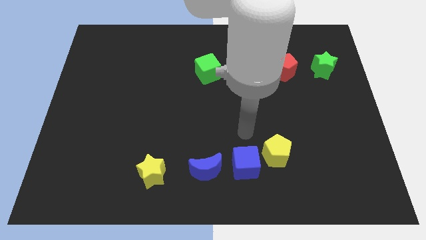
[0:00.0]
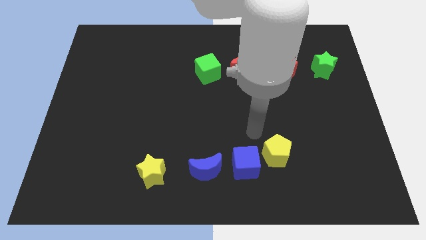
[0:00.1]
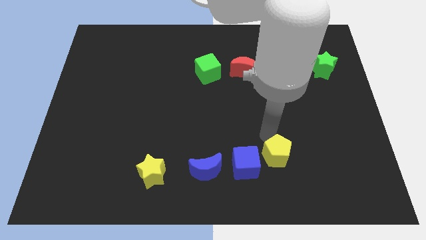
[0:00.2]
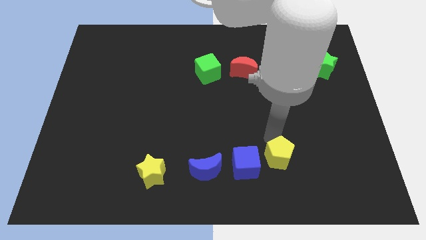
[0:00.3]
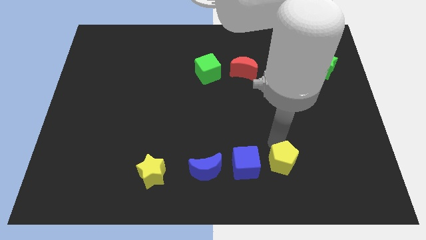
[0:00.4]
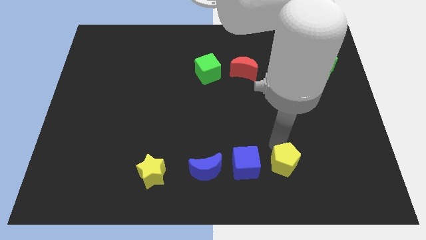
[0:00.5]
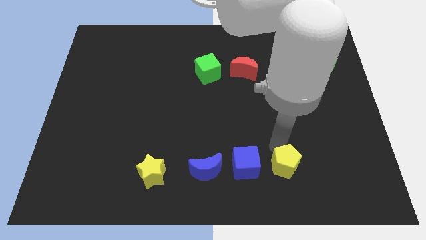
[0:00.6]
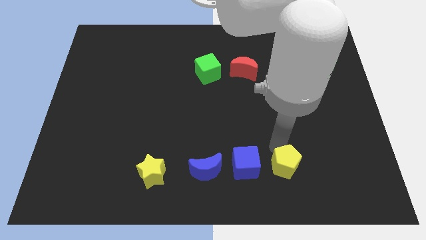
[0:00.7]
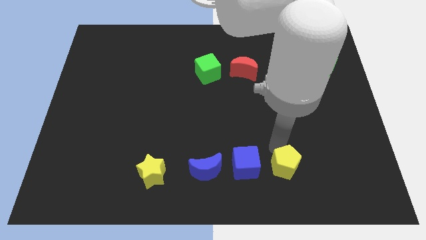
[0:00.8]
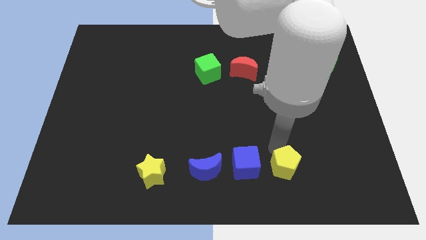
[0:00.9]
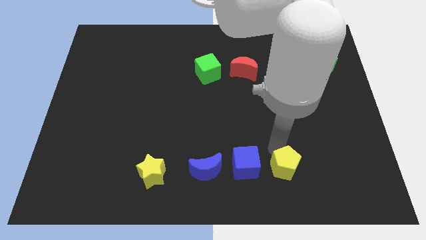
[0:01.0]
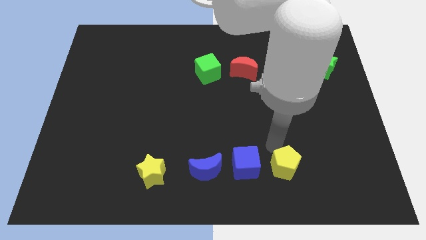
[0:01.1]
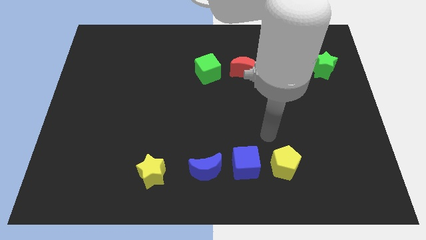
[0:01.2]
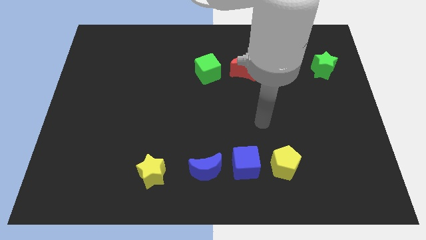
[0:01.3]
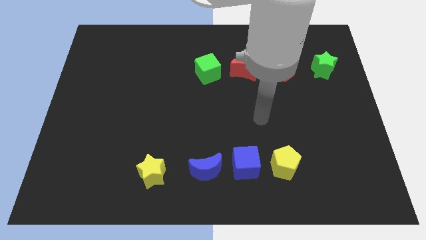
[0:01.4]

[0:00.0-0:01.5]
slightly push the yellow pentagon to the bottom

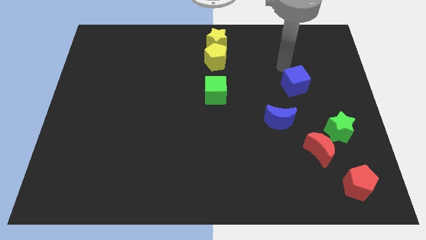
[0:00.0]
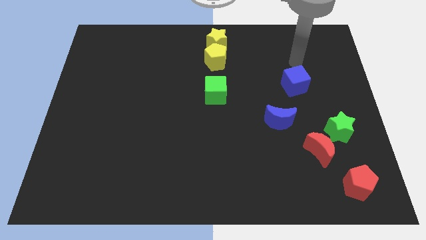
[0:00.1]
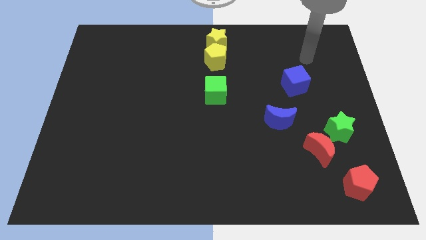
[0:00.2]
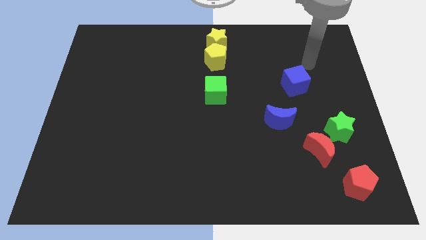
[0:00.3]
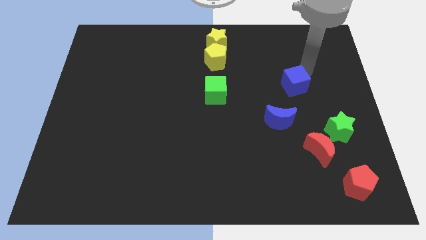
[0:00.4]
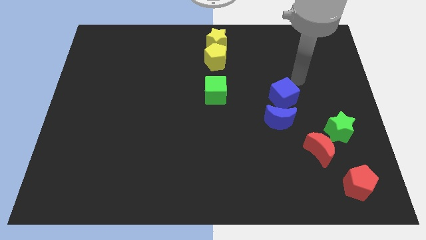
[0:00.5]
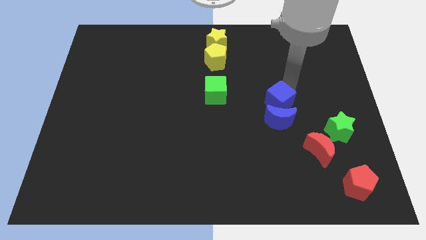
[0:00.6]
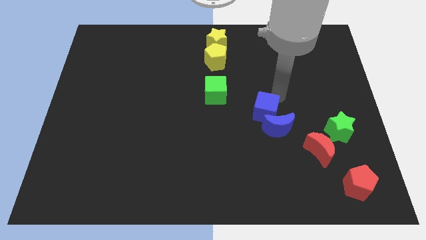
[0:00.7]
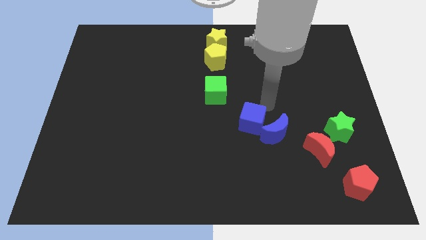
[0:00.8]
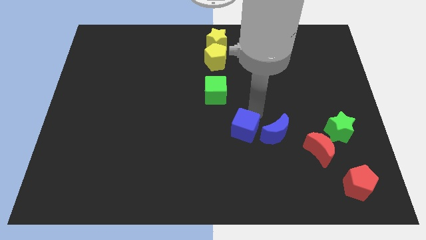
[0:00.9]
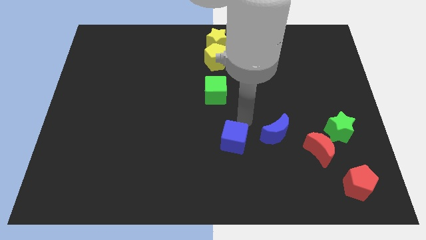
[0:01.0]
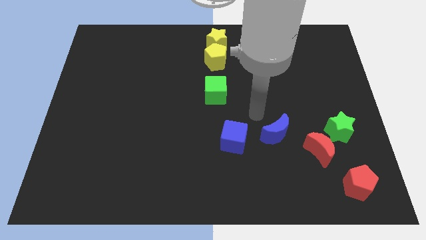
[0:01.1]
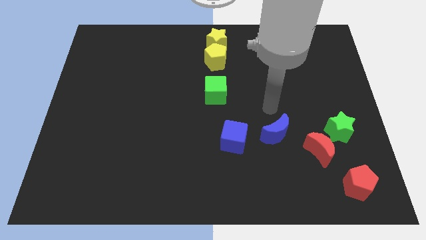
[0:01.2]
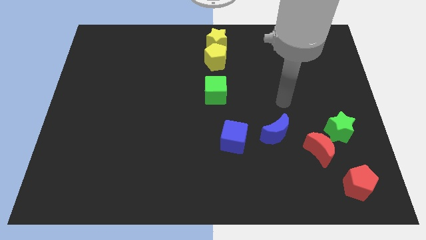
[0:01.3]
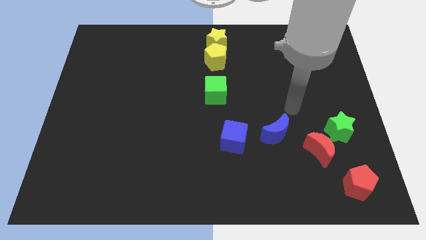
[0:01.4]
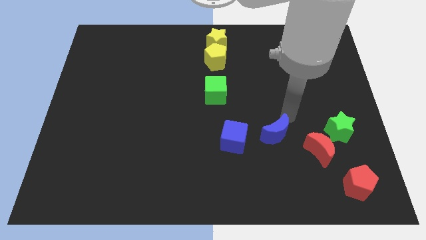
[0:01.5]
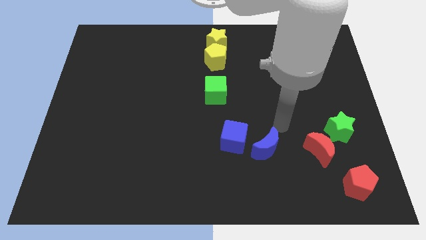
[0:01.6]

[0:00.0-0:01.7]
push the blue cube into the blue moon

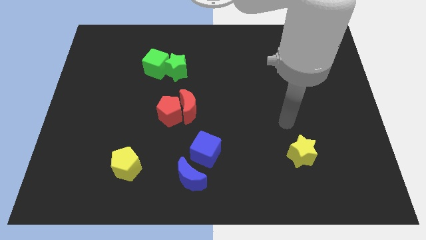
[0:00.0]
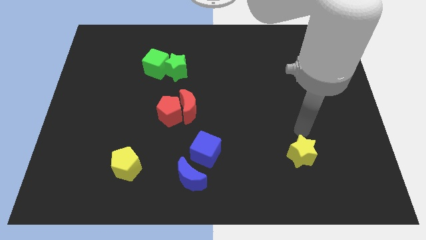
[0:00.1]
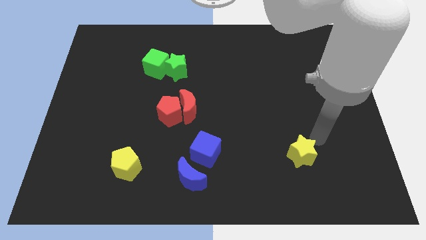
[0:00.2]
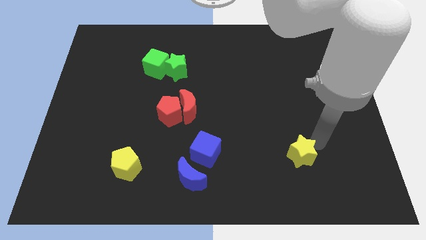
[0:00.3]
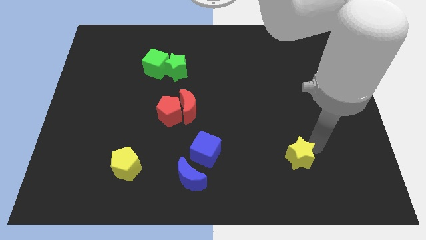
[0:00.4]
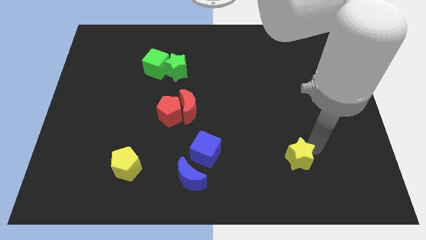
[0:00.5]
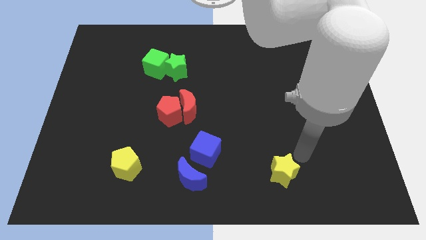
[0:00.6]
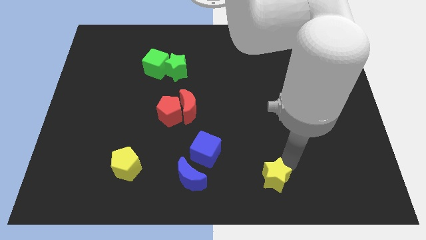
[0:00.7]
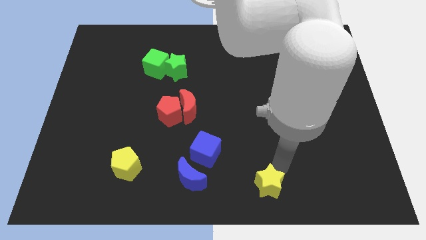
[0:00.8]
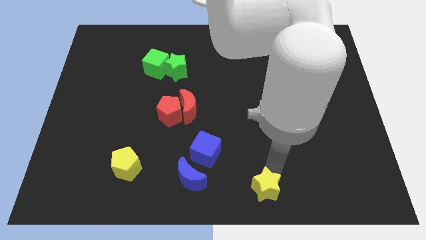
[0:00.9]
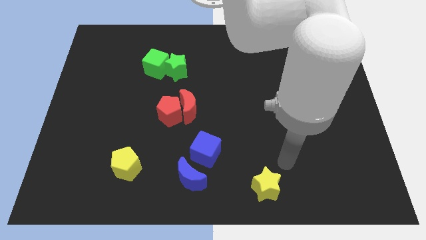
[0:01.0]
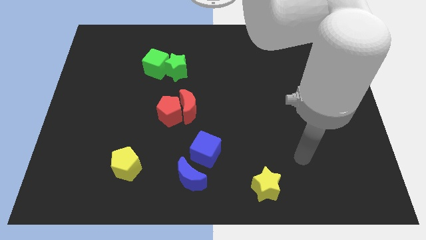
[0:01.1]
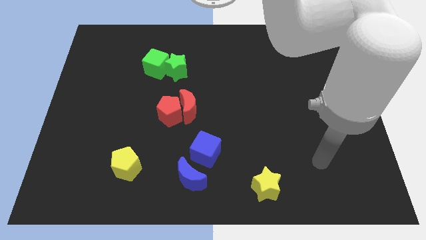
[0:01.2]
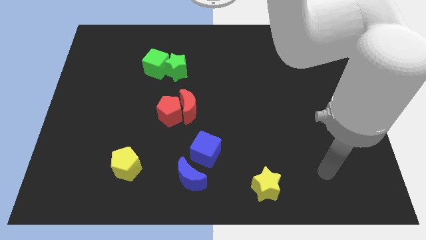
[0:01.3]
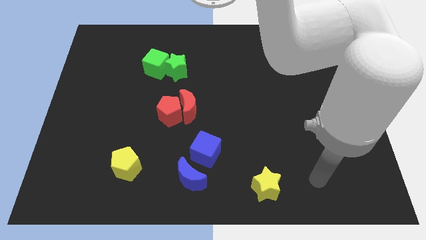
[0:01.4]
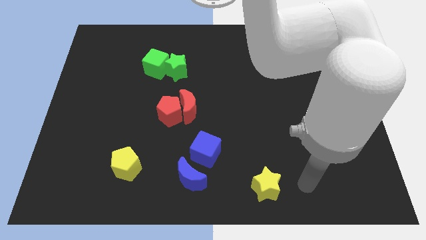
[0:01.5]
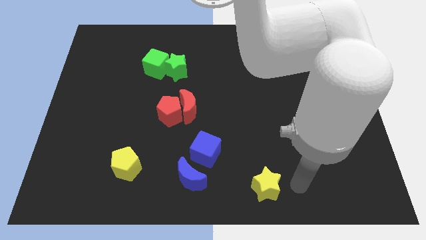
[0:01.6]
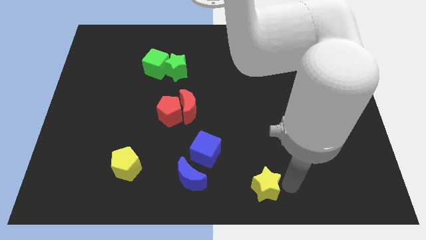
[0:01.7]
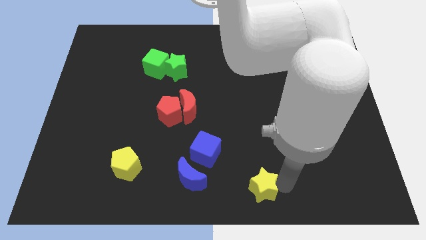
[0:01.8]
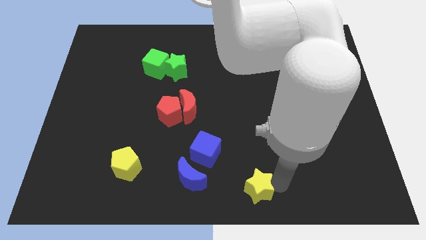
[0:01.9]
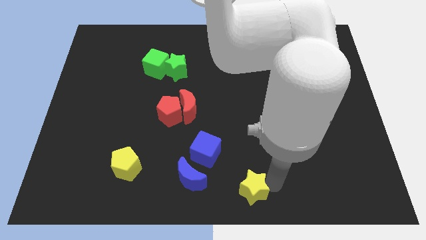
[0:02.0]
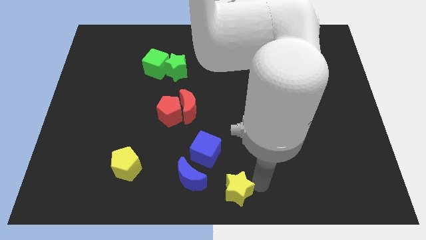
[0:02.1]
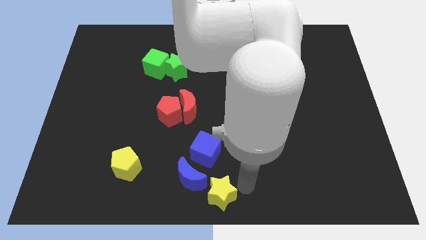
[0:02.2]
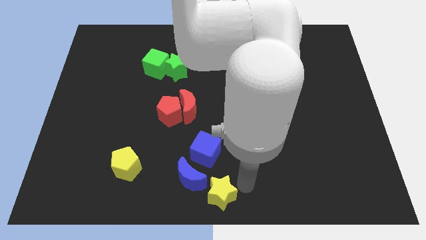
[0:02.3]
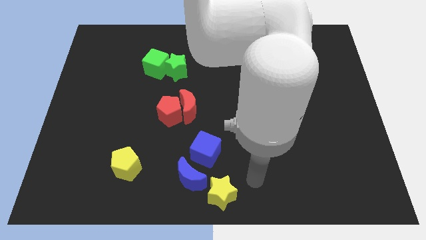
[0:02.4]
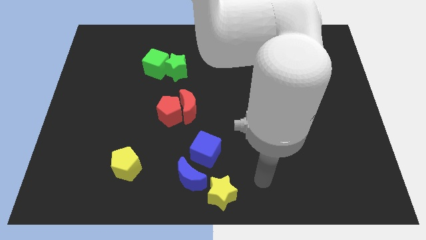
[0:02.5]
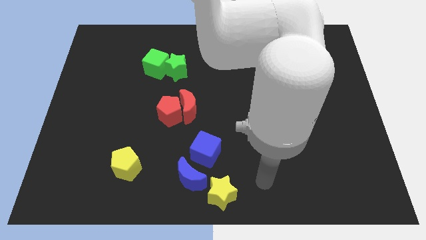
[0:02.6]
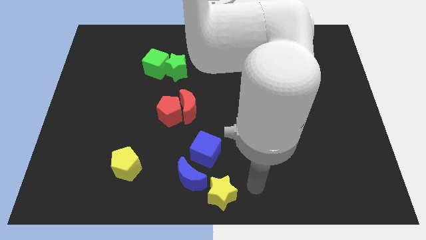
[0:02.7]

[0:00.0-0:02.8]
move the yellow star diagonal below the blue moon

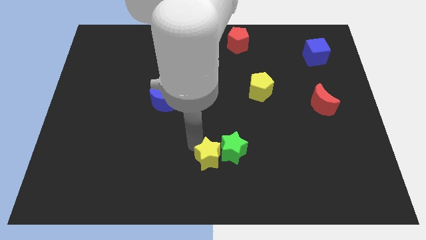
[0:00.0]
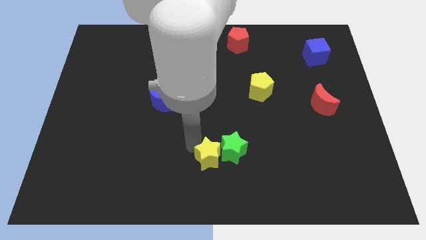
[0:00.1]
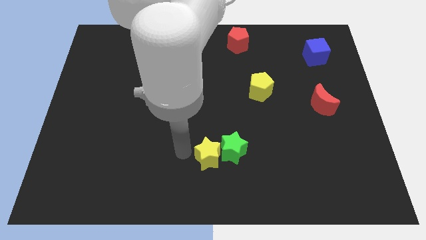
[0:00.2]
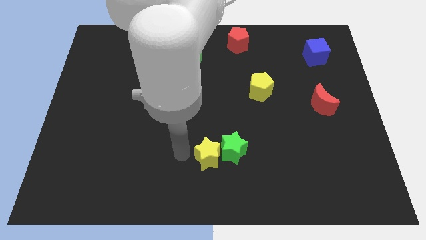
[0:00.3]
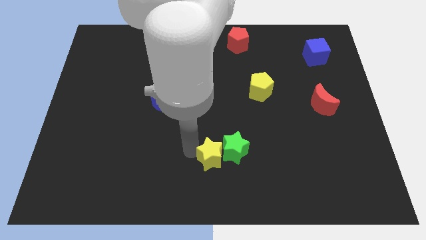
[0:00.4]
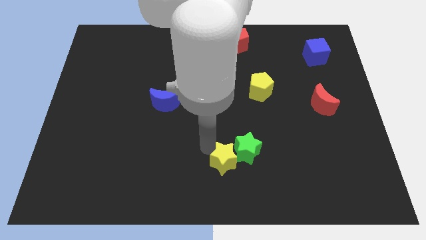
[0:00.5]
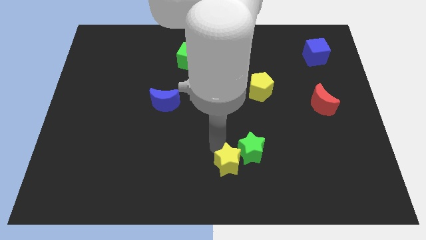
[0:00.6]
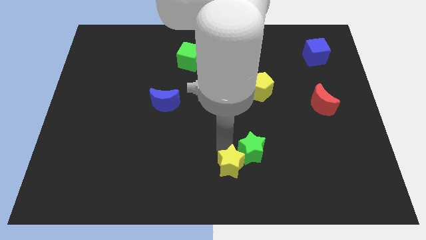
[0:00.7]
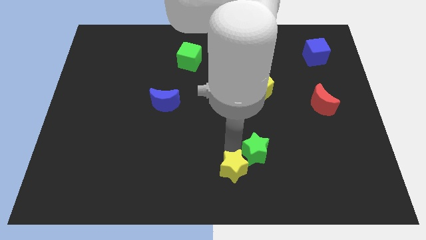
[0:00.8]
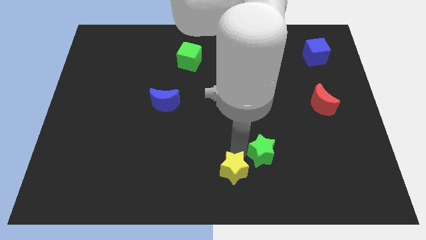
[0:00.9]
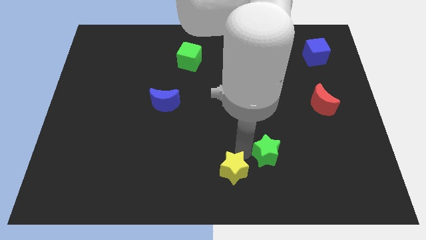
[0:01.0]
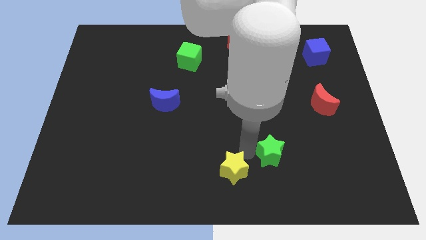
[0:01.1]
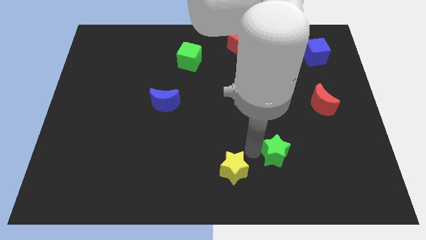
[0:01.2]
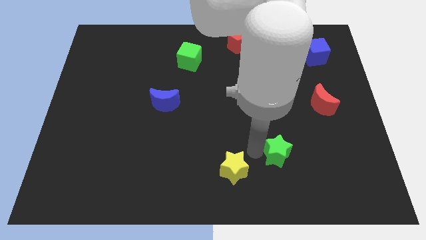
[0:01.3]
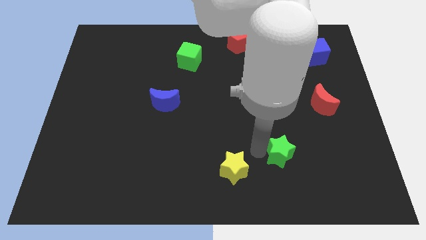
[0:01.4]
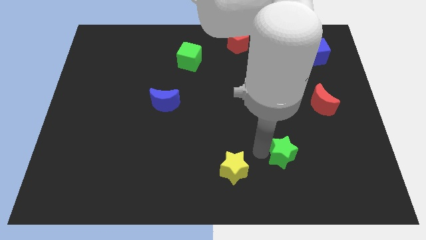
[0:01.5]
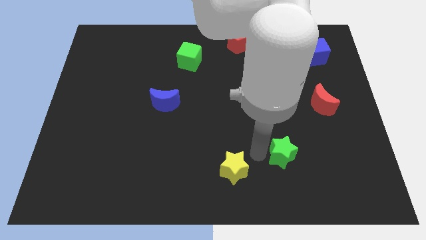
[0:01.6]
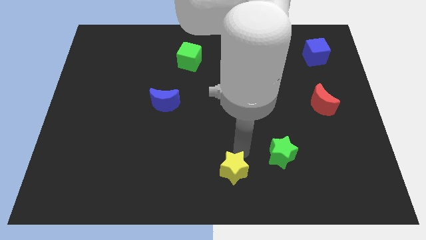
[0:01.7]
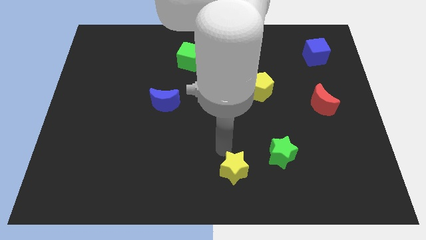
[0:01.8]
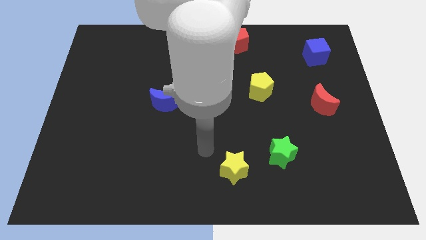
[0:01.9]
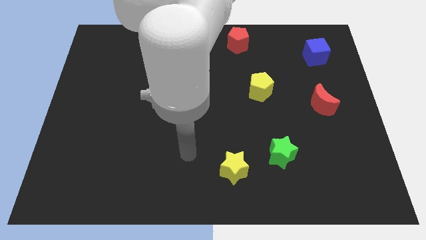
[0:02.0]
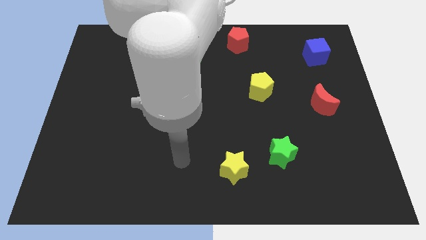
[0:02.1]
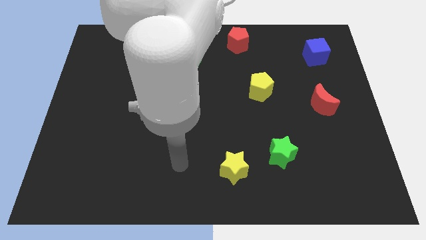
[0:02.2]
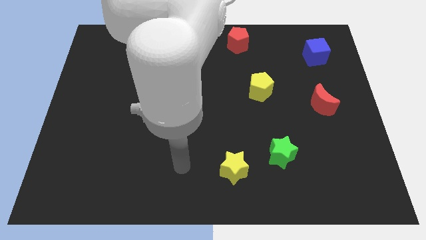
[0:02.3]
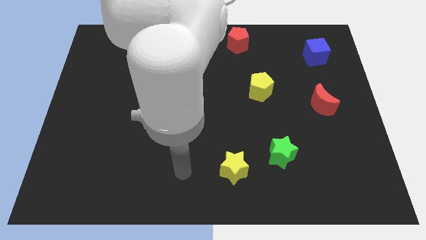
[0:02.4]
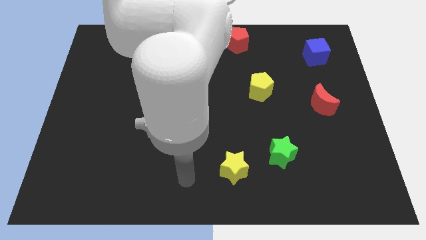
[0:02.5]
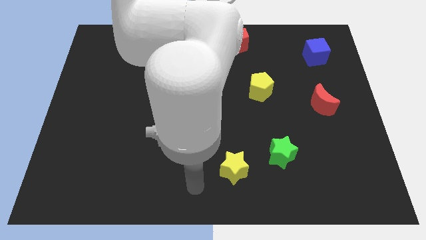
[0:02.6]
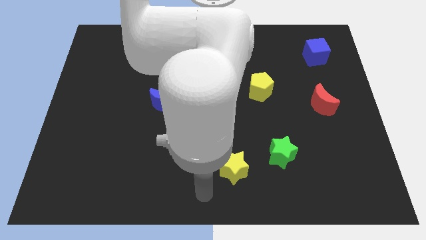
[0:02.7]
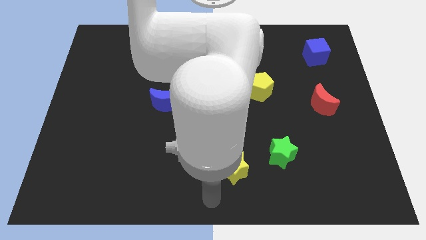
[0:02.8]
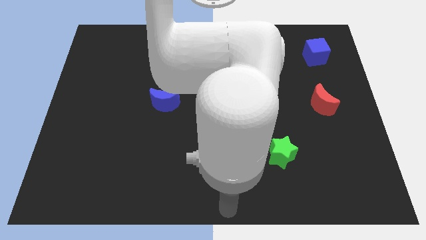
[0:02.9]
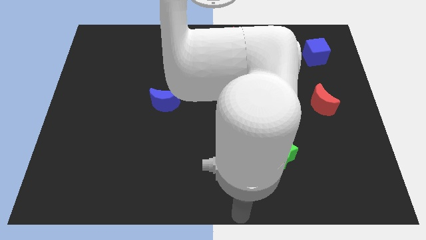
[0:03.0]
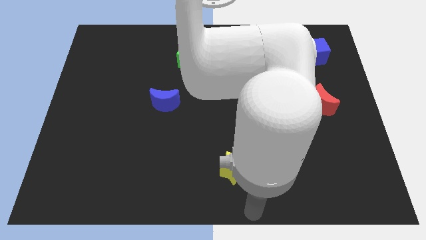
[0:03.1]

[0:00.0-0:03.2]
point your arm below the yellow star
